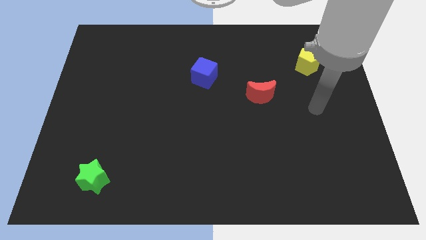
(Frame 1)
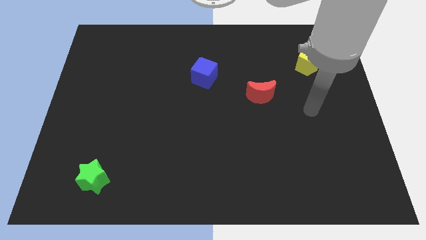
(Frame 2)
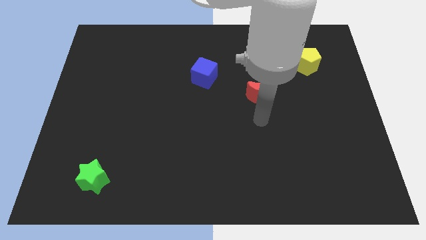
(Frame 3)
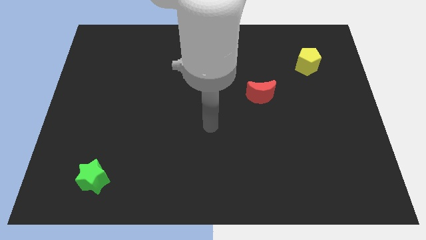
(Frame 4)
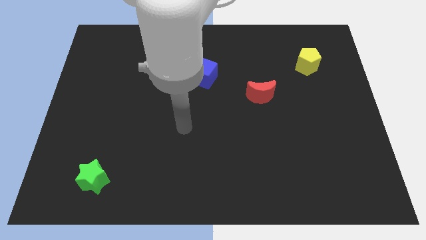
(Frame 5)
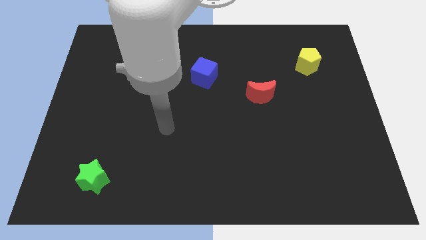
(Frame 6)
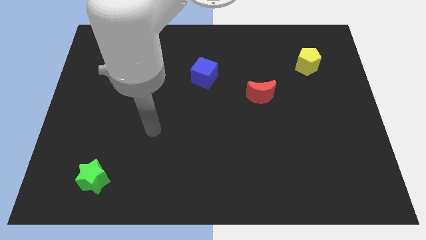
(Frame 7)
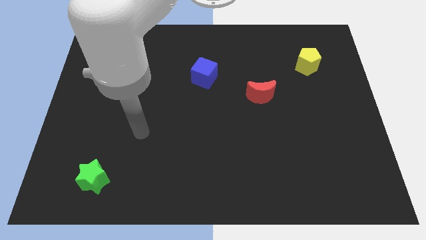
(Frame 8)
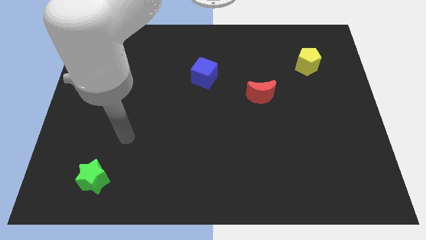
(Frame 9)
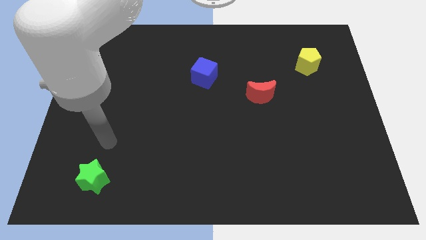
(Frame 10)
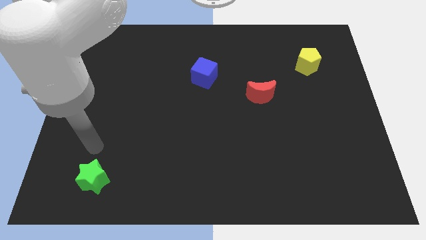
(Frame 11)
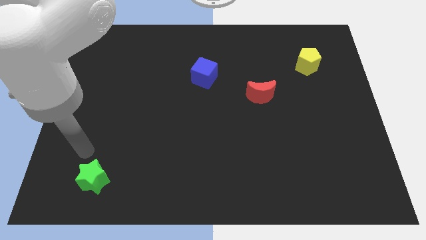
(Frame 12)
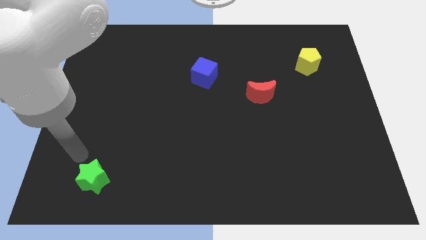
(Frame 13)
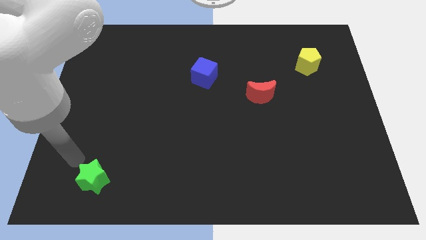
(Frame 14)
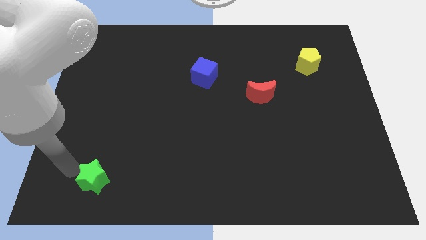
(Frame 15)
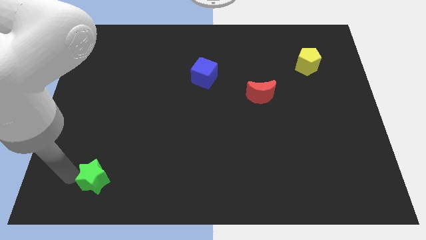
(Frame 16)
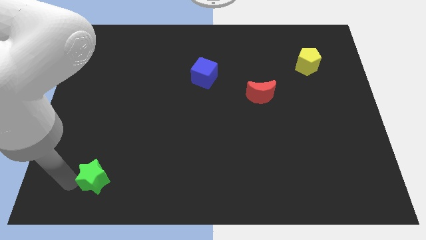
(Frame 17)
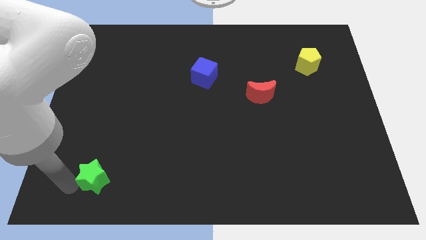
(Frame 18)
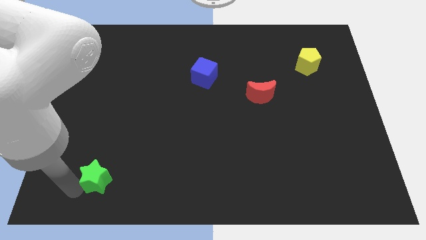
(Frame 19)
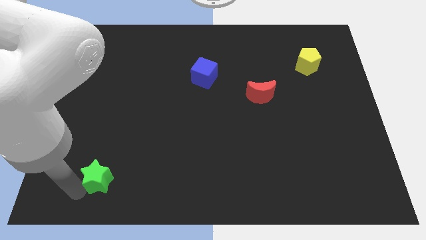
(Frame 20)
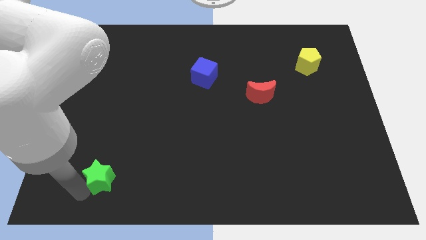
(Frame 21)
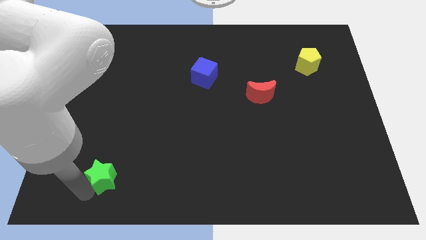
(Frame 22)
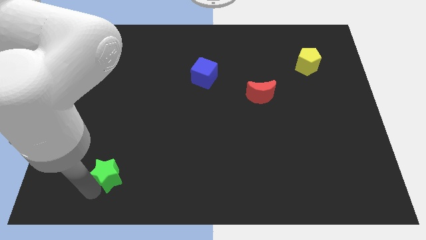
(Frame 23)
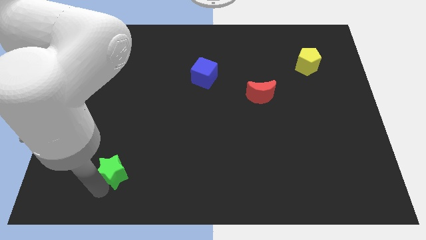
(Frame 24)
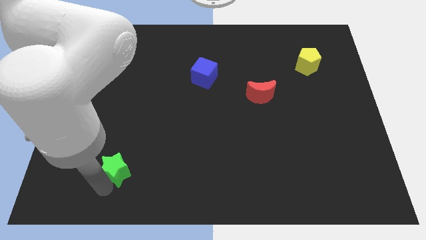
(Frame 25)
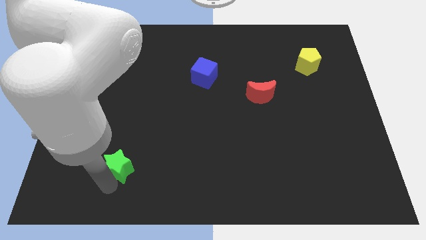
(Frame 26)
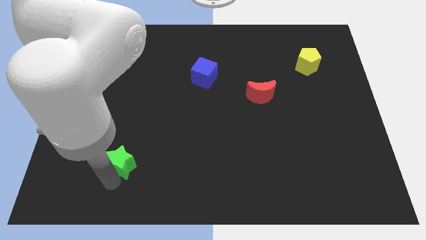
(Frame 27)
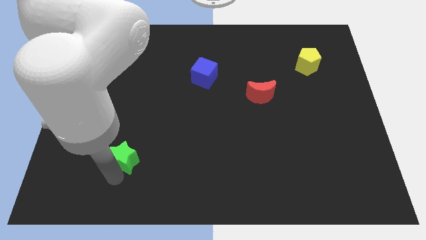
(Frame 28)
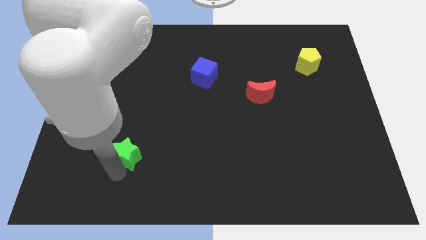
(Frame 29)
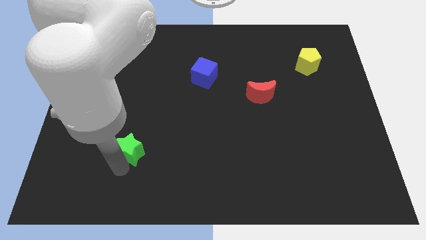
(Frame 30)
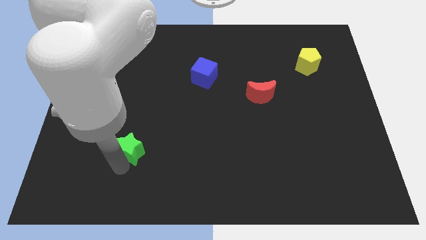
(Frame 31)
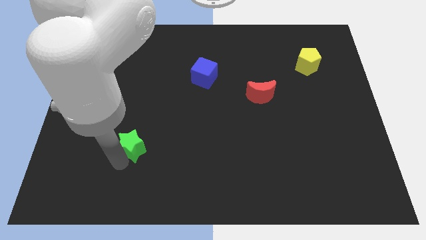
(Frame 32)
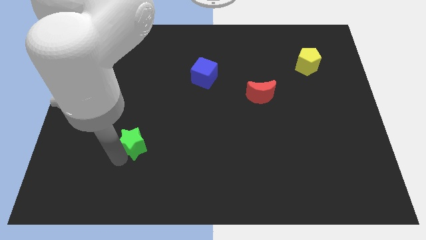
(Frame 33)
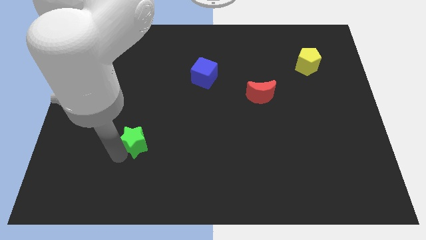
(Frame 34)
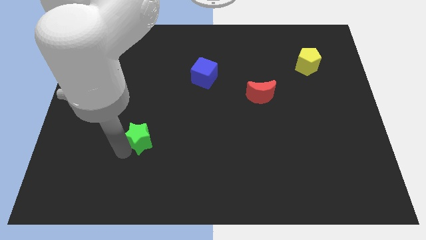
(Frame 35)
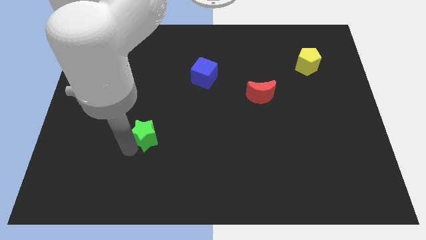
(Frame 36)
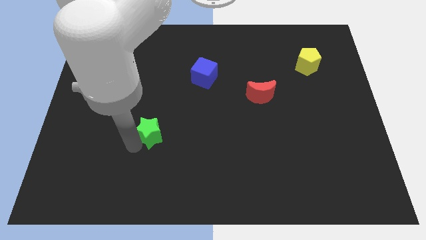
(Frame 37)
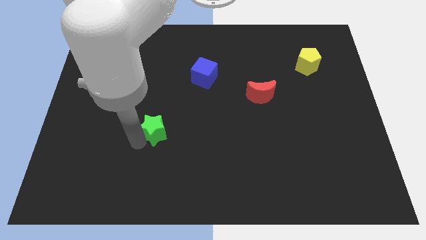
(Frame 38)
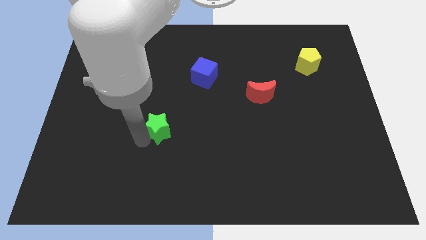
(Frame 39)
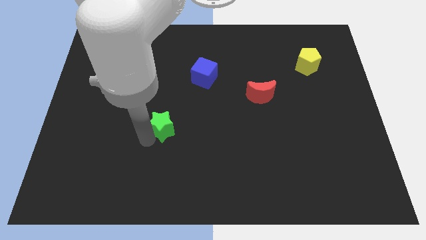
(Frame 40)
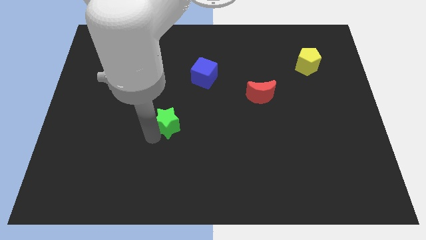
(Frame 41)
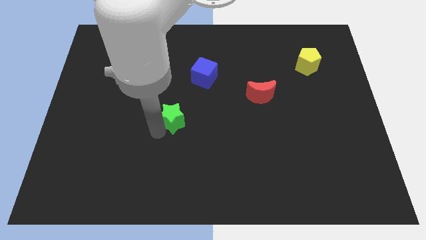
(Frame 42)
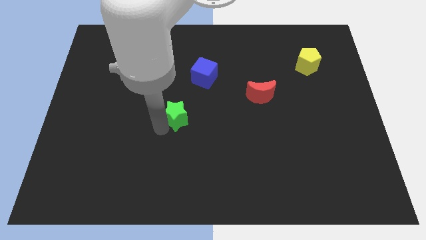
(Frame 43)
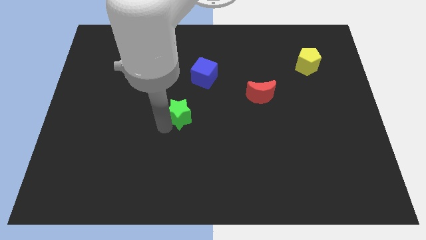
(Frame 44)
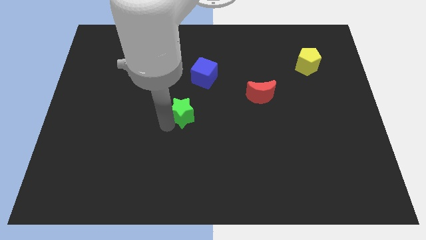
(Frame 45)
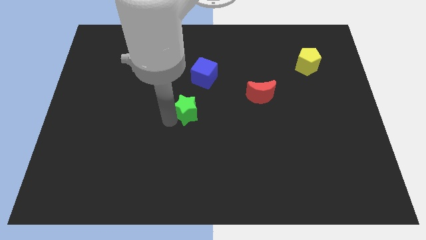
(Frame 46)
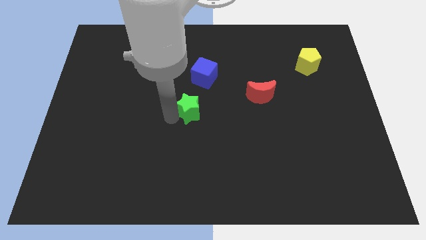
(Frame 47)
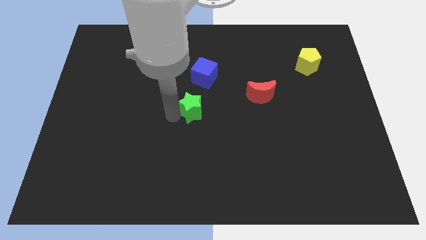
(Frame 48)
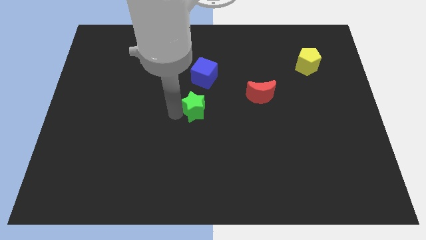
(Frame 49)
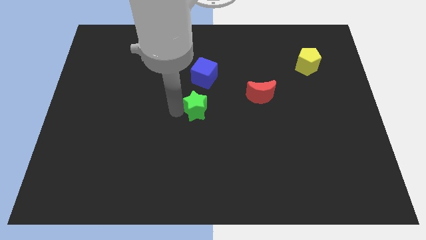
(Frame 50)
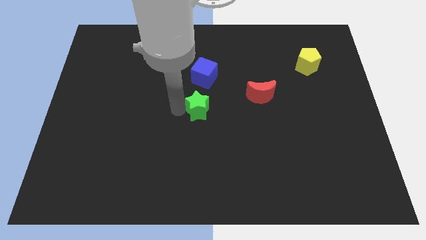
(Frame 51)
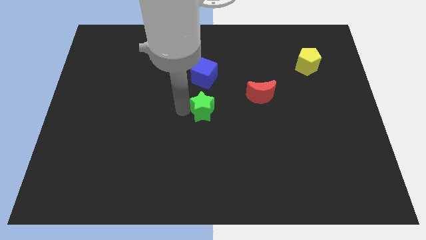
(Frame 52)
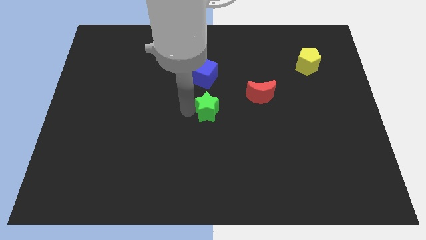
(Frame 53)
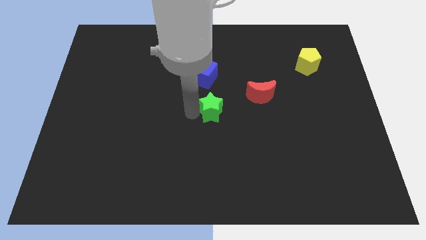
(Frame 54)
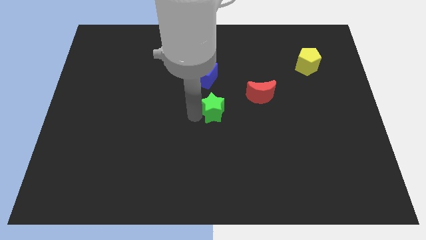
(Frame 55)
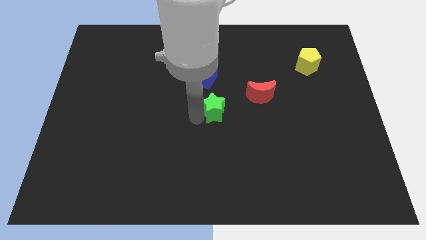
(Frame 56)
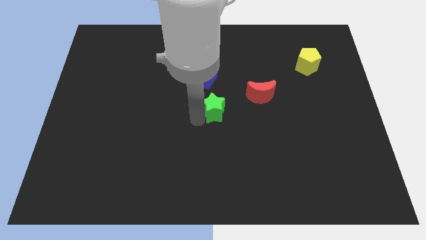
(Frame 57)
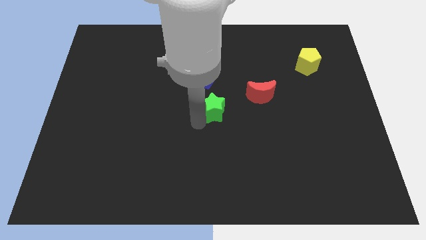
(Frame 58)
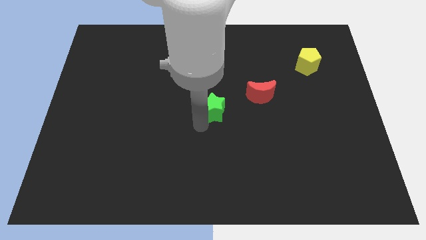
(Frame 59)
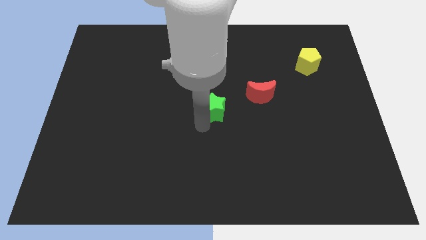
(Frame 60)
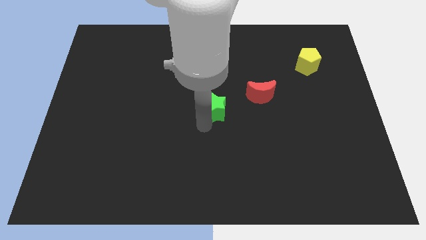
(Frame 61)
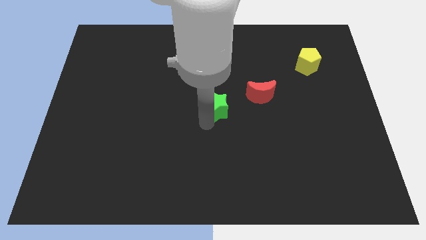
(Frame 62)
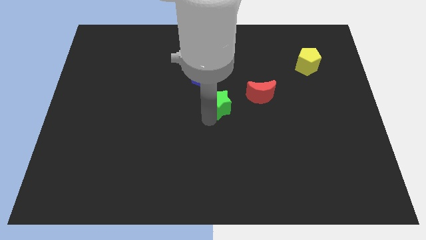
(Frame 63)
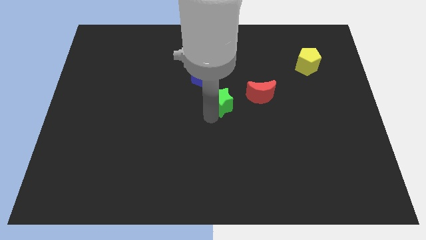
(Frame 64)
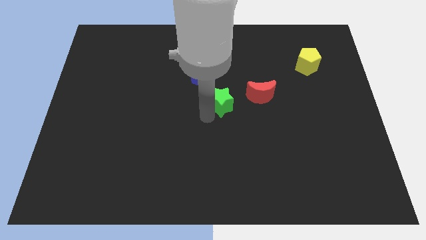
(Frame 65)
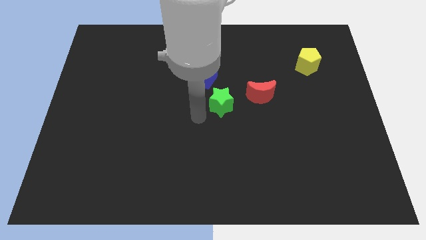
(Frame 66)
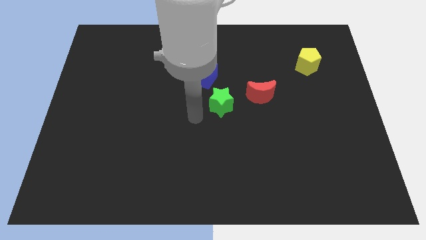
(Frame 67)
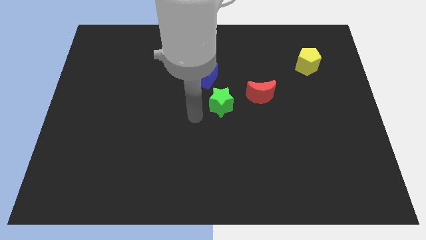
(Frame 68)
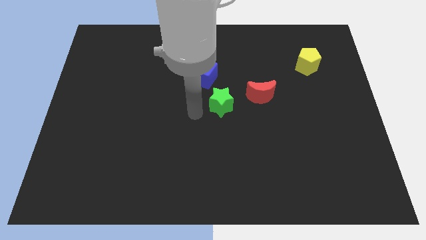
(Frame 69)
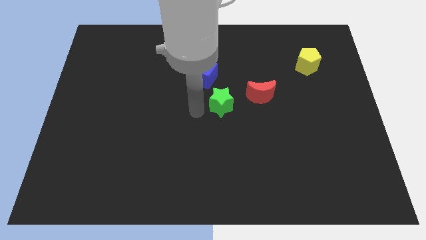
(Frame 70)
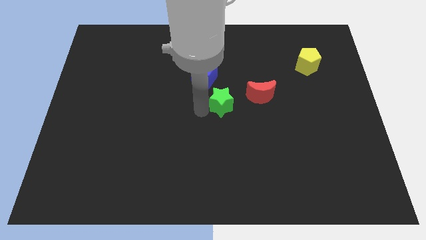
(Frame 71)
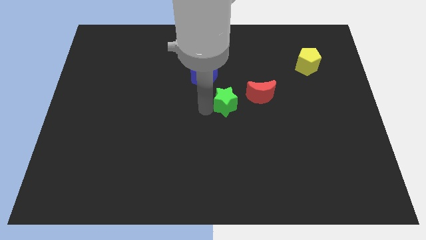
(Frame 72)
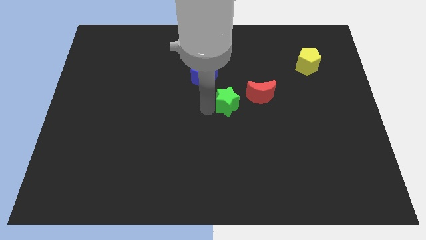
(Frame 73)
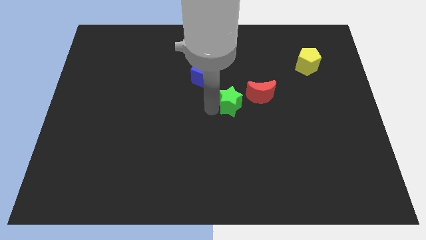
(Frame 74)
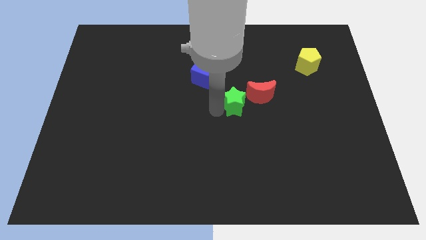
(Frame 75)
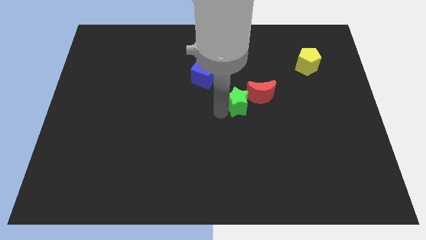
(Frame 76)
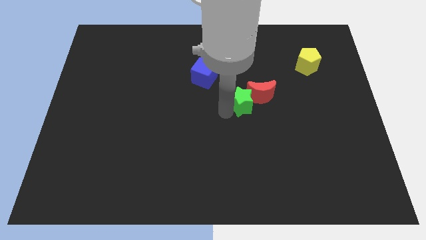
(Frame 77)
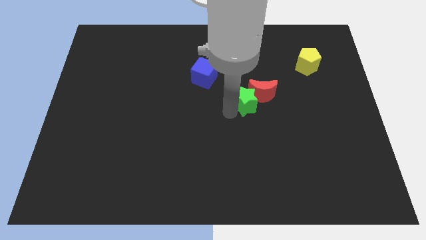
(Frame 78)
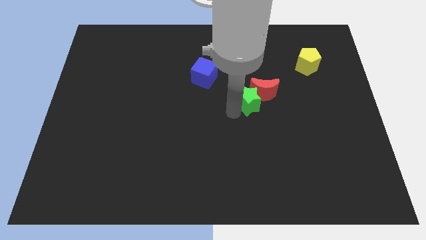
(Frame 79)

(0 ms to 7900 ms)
slide the green star next to the red moon

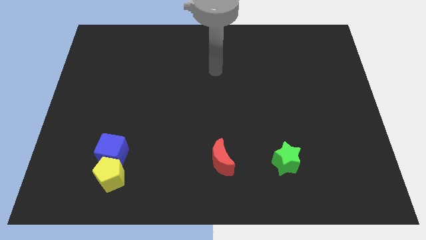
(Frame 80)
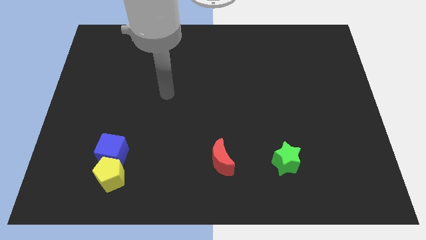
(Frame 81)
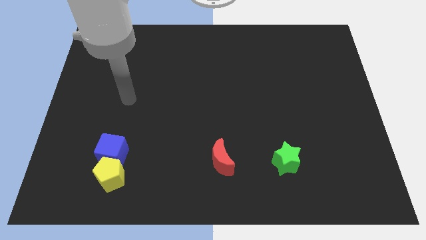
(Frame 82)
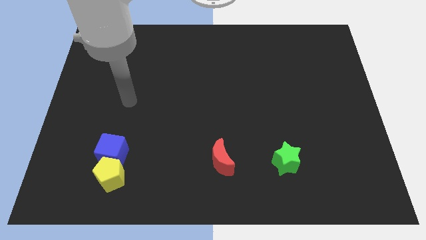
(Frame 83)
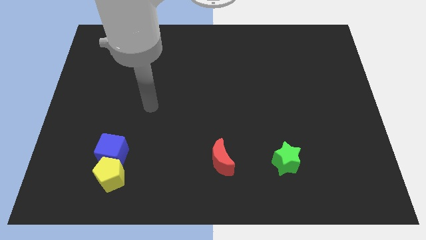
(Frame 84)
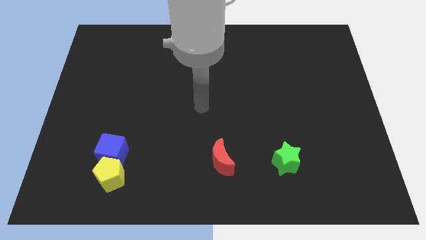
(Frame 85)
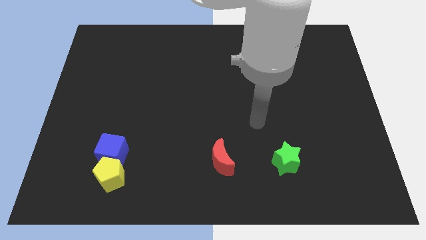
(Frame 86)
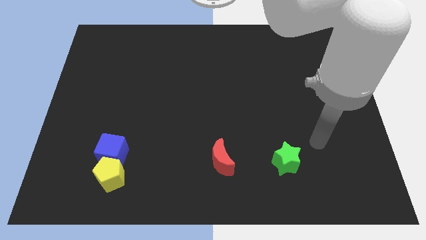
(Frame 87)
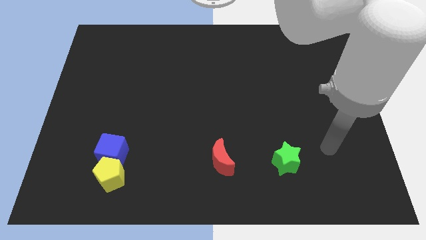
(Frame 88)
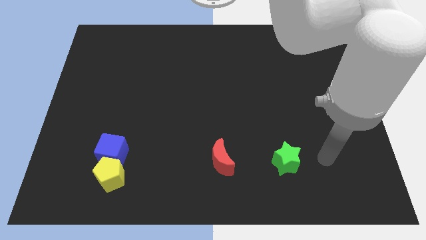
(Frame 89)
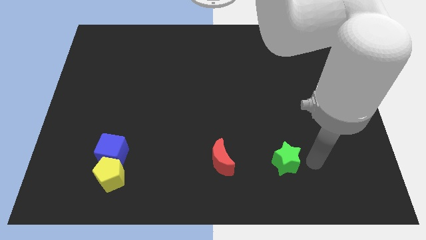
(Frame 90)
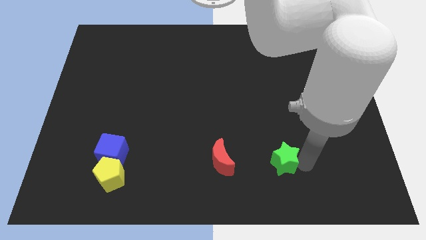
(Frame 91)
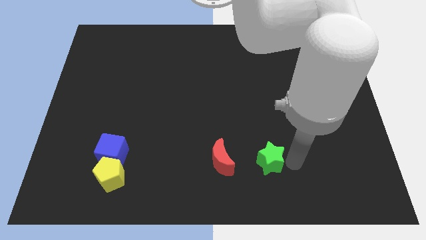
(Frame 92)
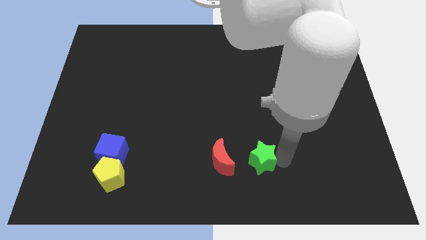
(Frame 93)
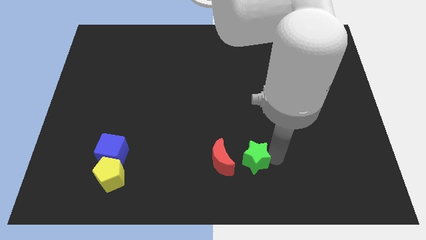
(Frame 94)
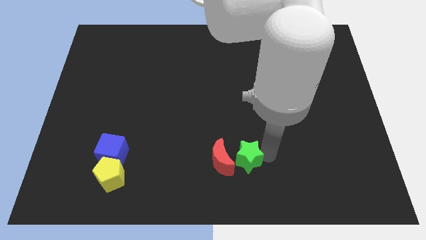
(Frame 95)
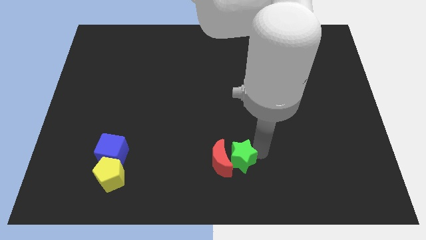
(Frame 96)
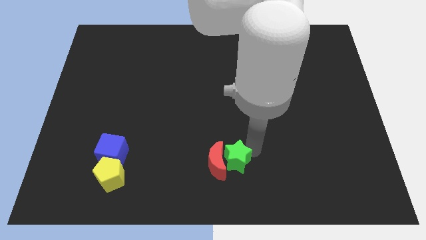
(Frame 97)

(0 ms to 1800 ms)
move the green block towards the moon
